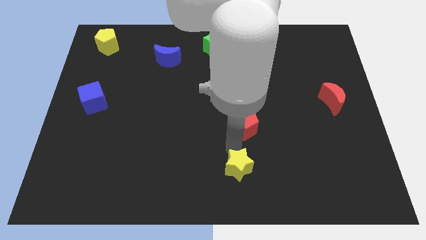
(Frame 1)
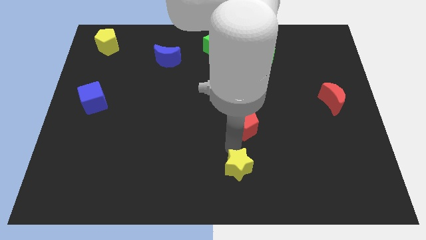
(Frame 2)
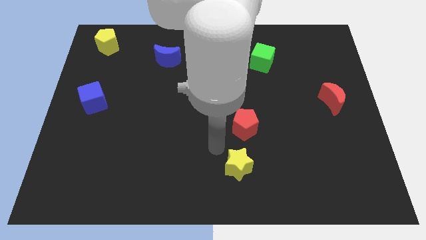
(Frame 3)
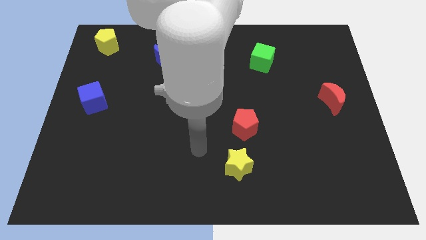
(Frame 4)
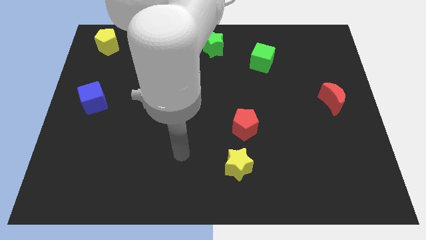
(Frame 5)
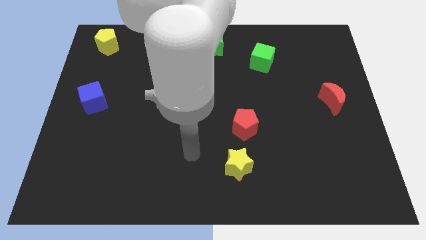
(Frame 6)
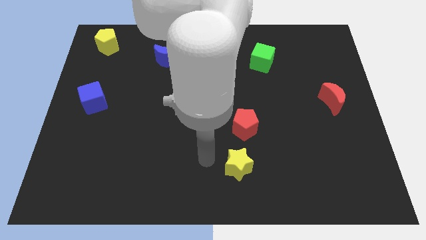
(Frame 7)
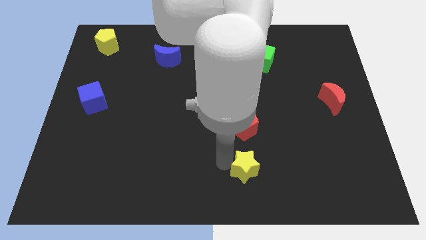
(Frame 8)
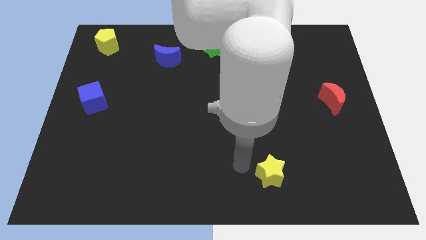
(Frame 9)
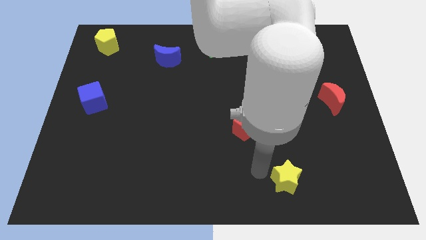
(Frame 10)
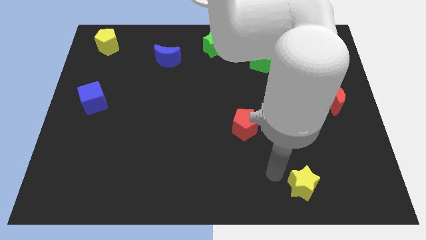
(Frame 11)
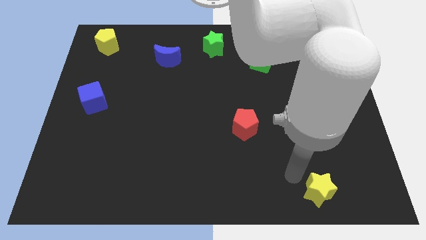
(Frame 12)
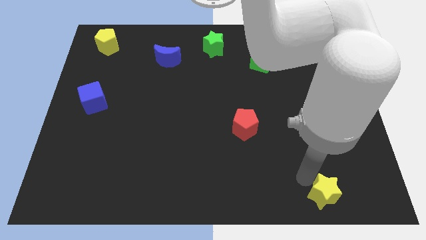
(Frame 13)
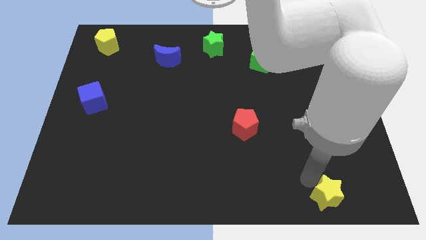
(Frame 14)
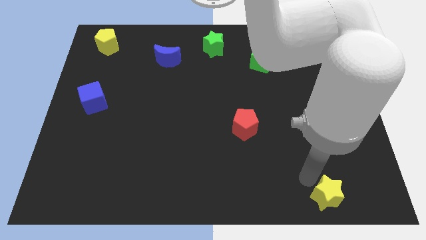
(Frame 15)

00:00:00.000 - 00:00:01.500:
push the yellow star to the bottom side of the table

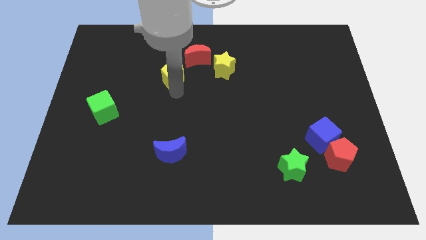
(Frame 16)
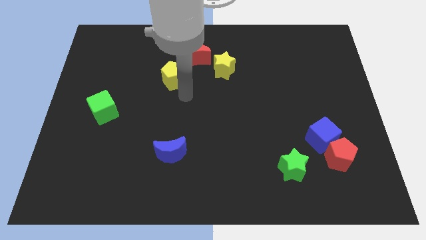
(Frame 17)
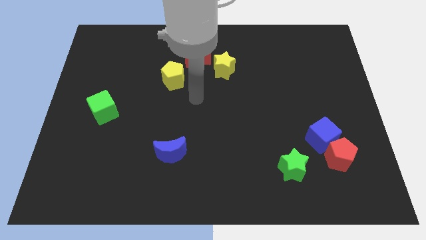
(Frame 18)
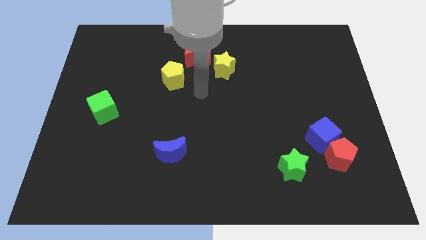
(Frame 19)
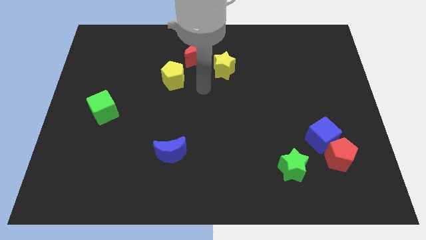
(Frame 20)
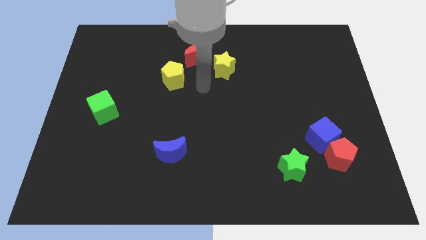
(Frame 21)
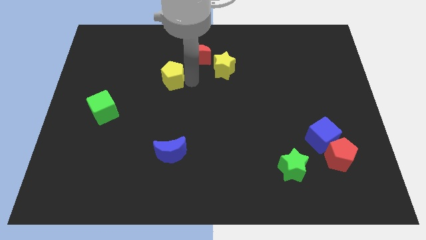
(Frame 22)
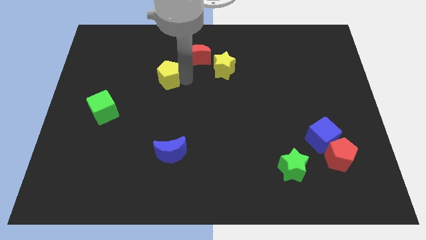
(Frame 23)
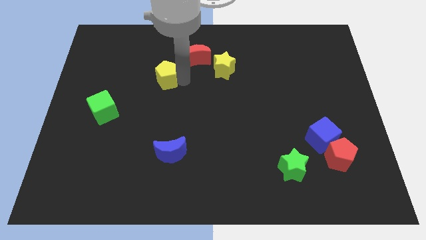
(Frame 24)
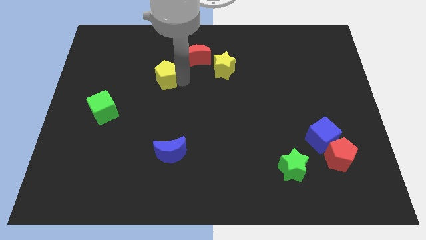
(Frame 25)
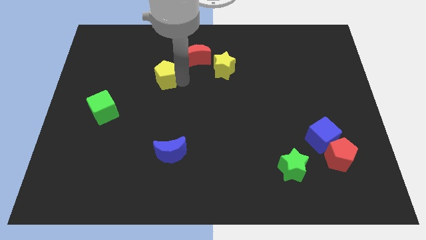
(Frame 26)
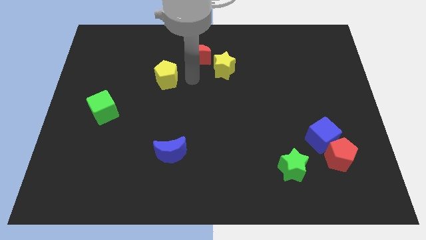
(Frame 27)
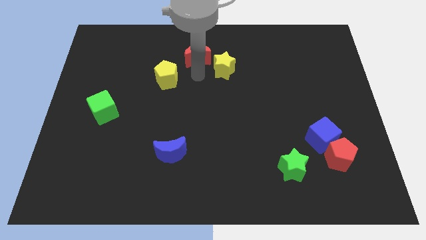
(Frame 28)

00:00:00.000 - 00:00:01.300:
push the yellow pentagon slightly to the left

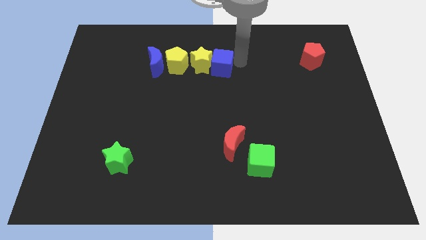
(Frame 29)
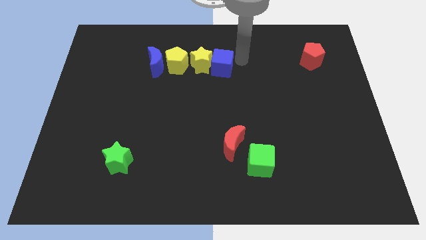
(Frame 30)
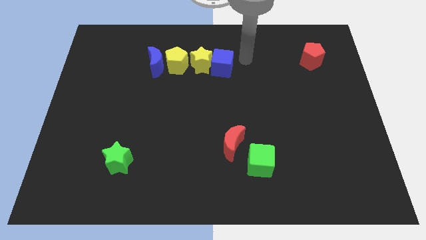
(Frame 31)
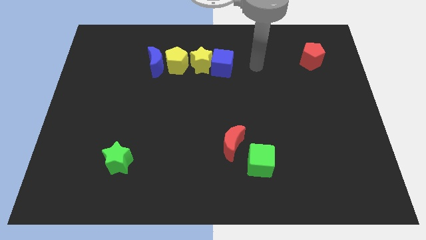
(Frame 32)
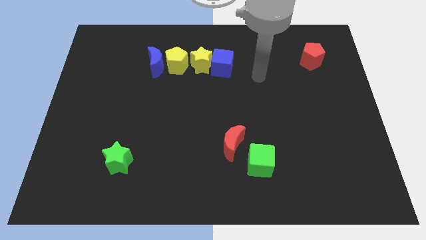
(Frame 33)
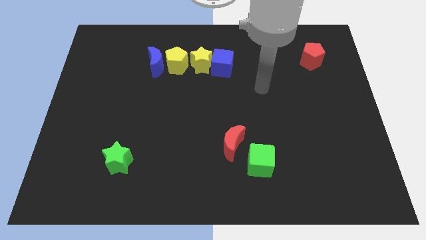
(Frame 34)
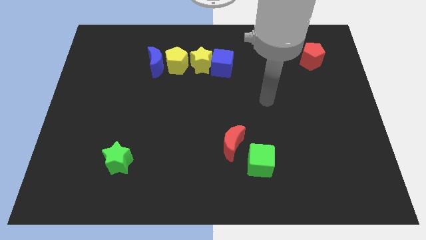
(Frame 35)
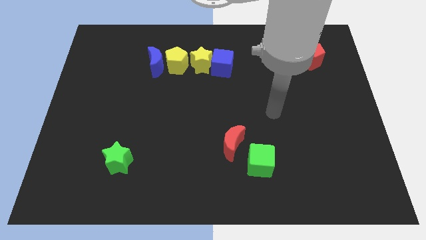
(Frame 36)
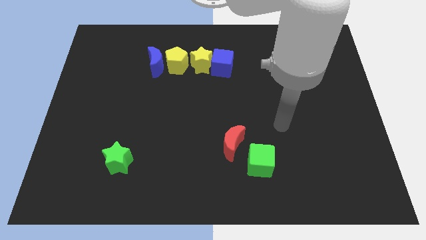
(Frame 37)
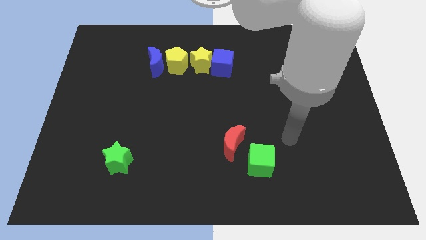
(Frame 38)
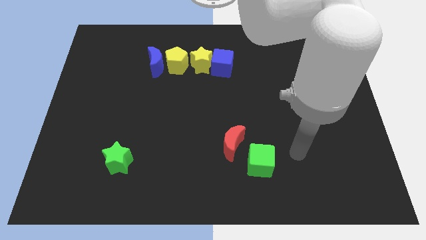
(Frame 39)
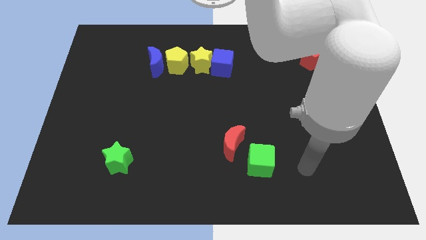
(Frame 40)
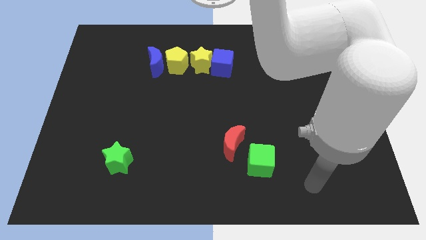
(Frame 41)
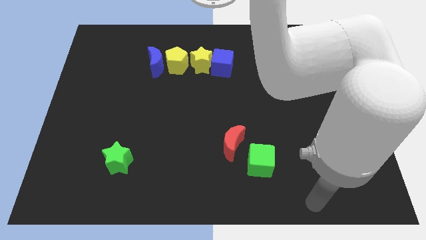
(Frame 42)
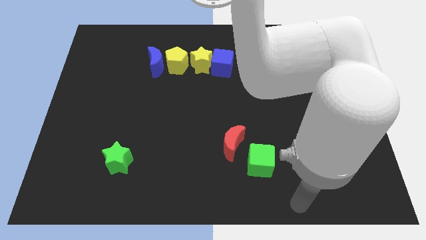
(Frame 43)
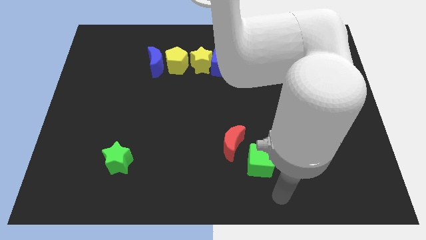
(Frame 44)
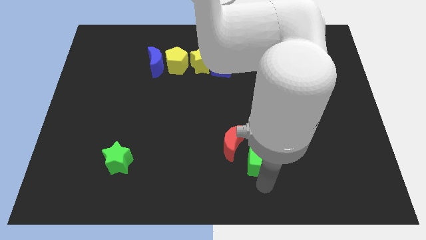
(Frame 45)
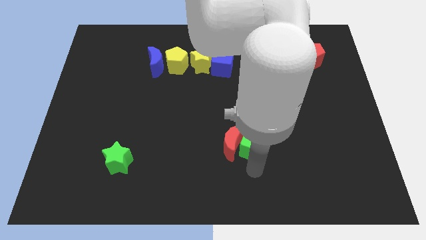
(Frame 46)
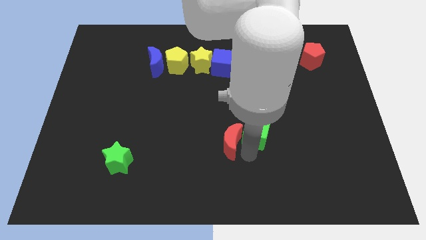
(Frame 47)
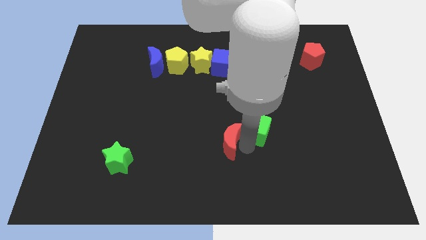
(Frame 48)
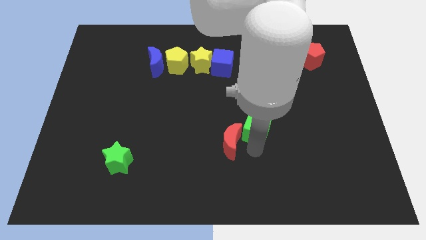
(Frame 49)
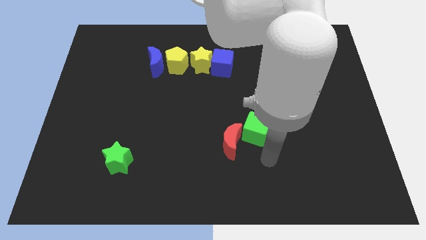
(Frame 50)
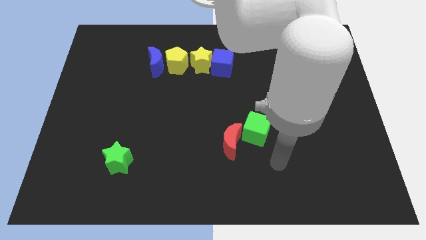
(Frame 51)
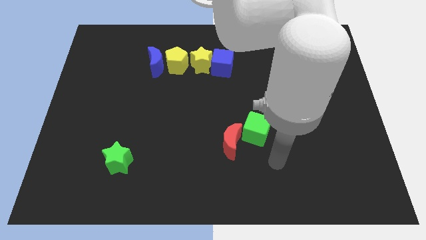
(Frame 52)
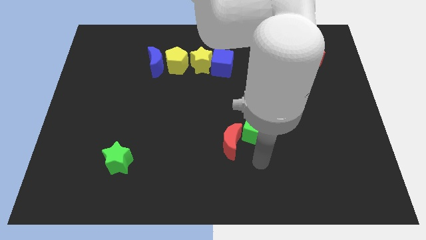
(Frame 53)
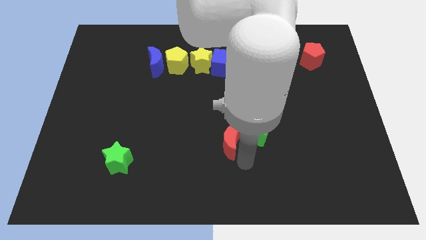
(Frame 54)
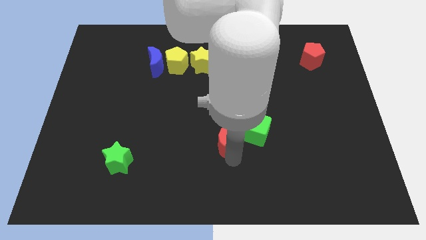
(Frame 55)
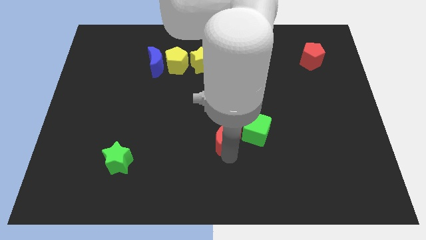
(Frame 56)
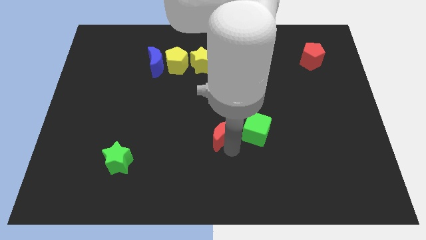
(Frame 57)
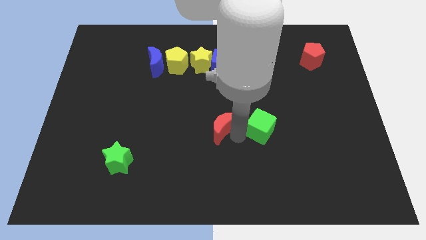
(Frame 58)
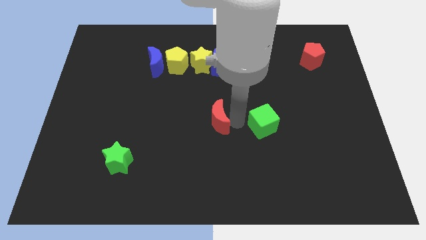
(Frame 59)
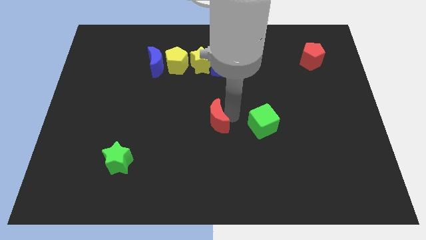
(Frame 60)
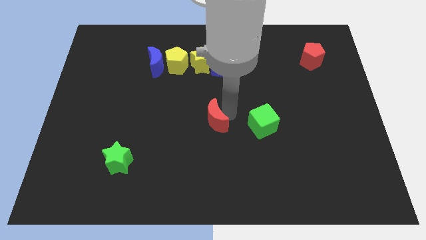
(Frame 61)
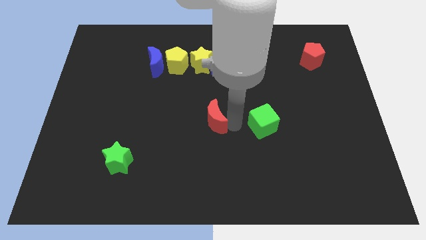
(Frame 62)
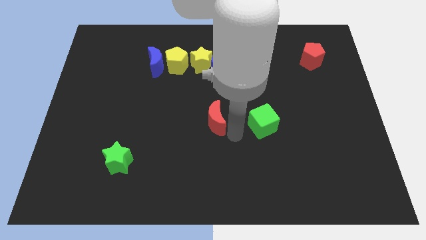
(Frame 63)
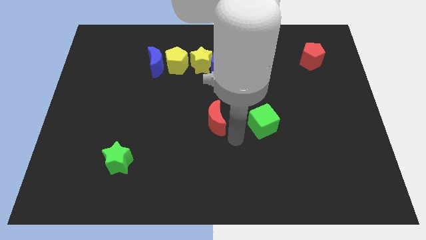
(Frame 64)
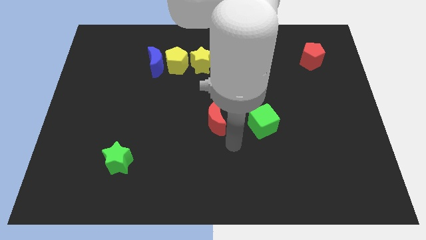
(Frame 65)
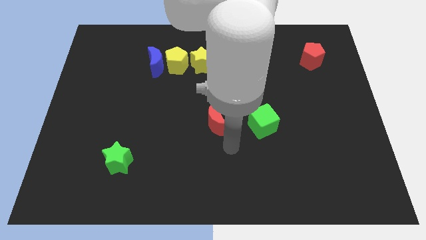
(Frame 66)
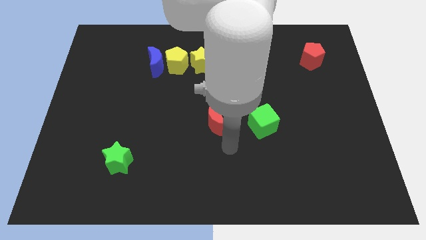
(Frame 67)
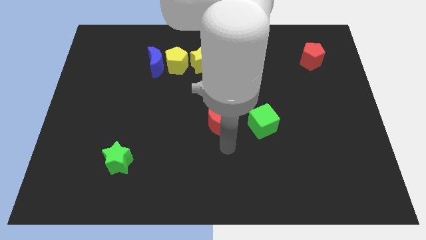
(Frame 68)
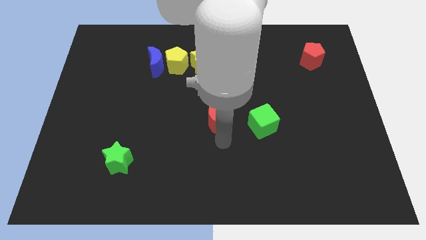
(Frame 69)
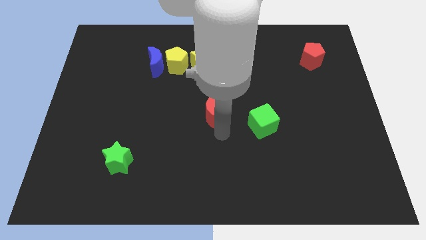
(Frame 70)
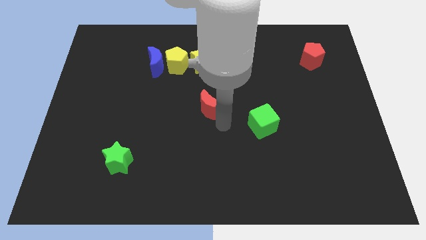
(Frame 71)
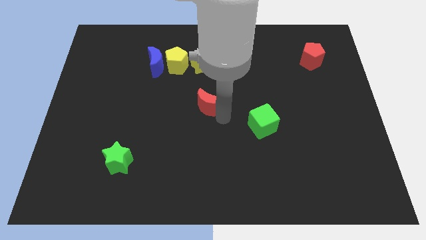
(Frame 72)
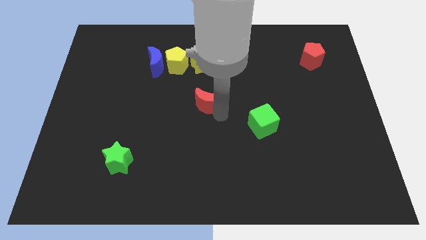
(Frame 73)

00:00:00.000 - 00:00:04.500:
separate the red crescent from the green cube

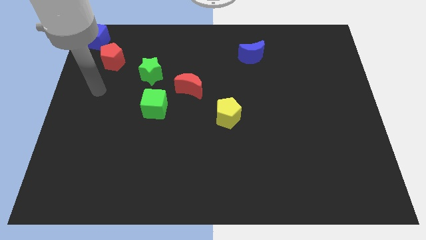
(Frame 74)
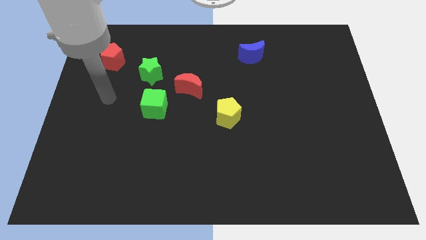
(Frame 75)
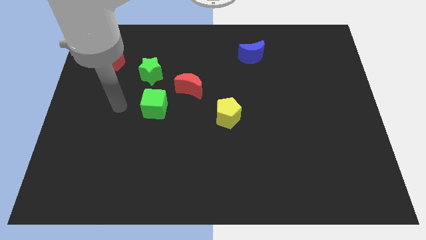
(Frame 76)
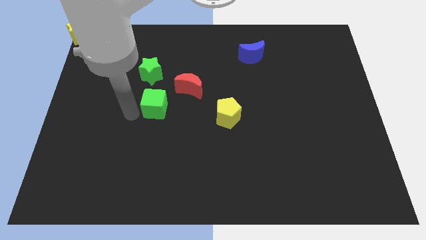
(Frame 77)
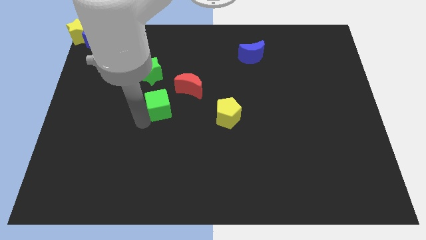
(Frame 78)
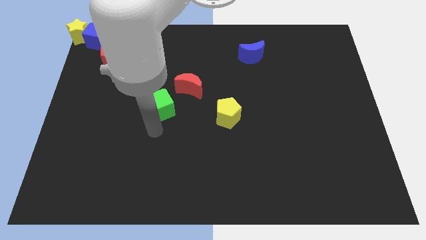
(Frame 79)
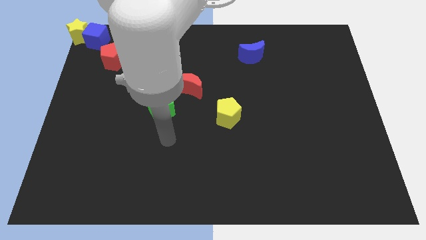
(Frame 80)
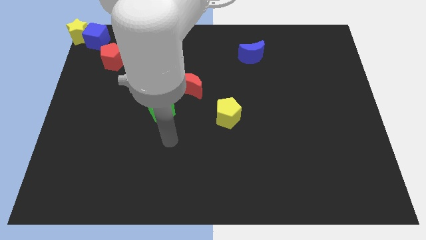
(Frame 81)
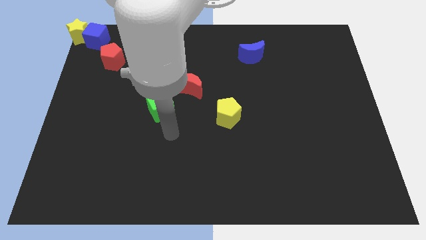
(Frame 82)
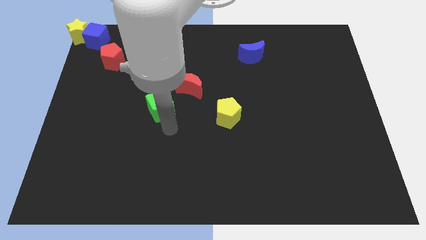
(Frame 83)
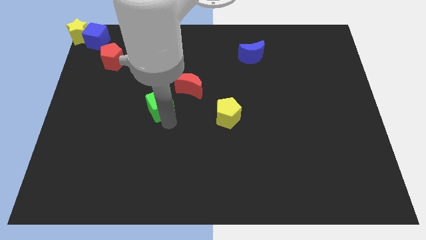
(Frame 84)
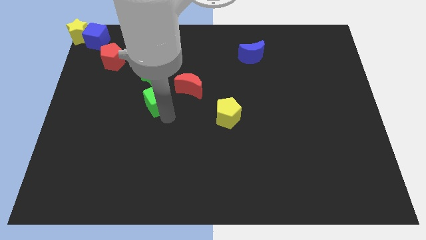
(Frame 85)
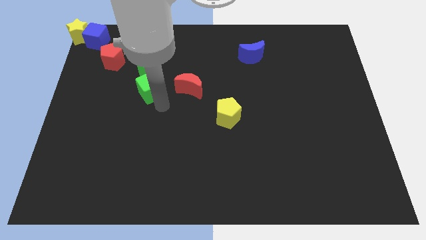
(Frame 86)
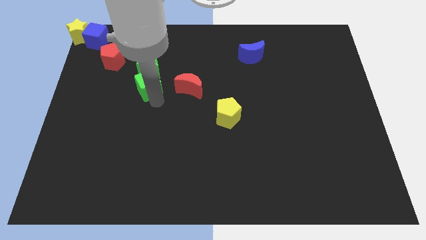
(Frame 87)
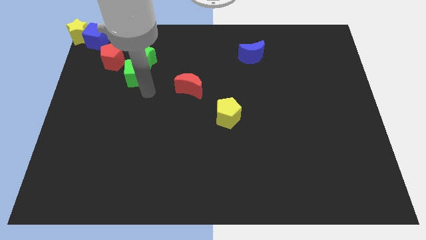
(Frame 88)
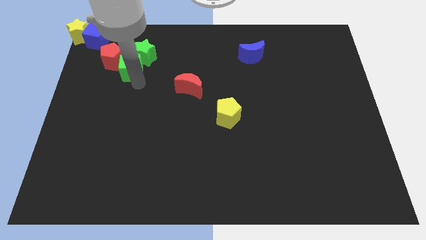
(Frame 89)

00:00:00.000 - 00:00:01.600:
push the green cube into the green star
